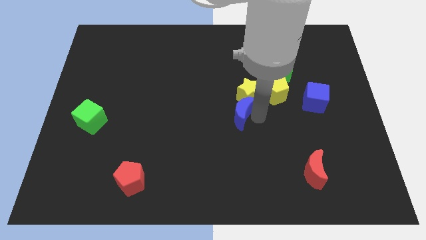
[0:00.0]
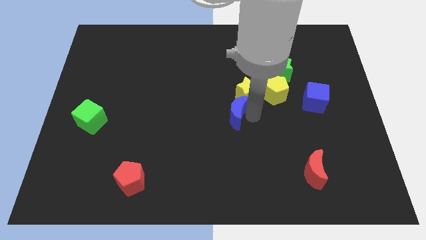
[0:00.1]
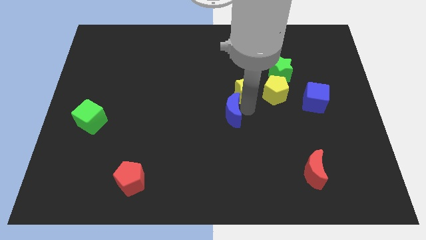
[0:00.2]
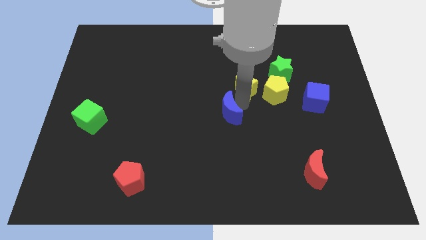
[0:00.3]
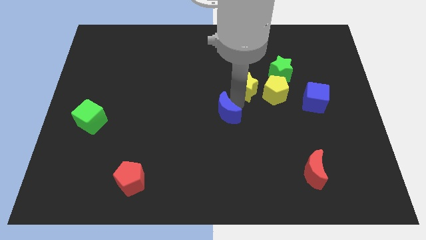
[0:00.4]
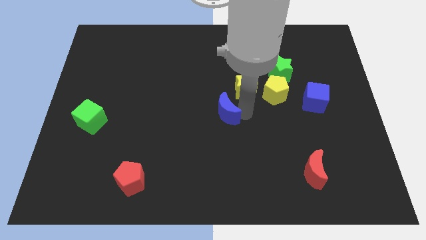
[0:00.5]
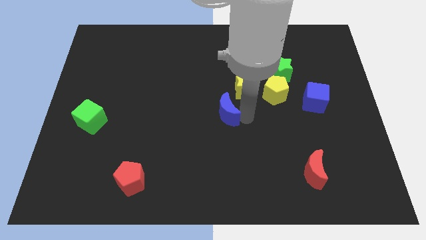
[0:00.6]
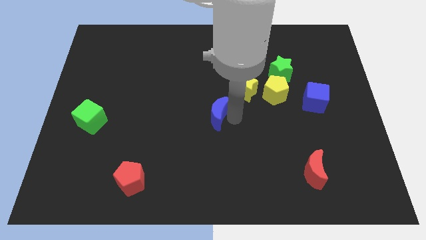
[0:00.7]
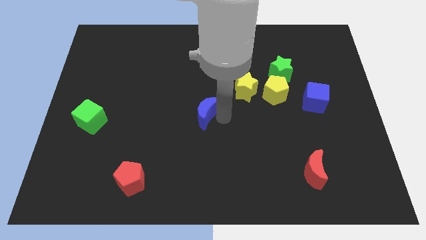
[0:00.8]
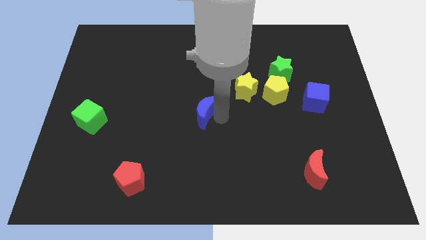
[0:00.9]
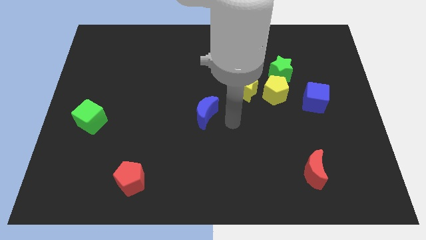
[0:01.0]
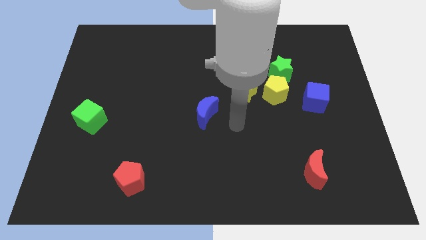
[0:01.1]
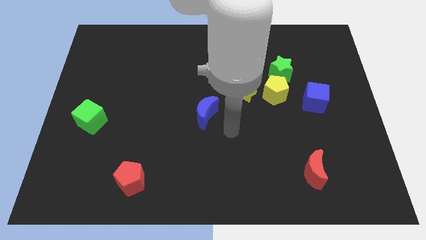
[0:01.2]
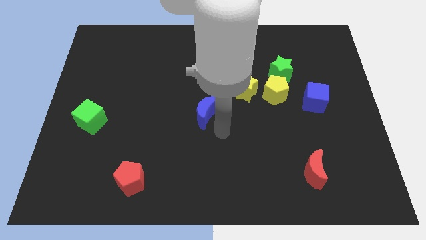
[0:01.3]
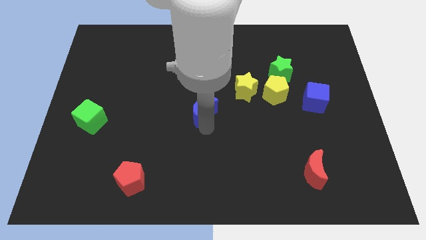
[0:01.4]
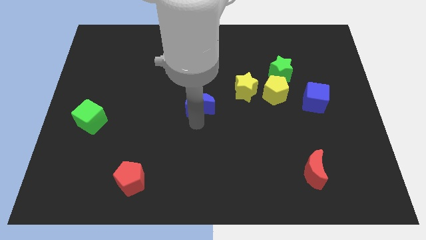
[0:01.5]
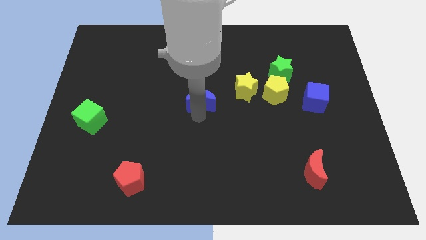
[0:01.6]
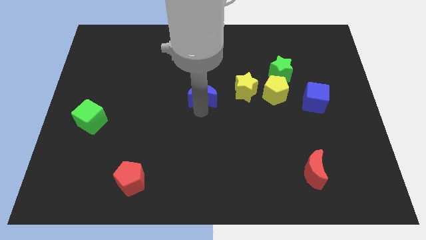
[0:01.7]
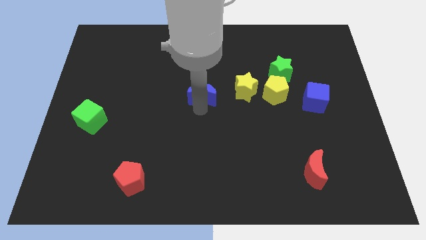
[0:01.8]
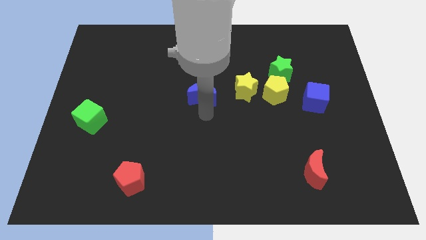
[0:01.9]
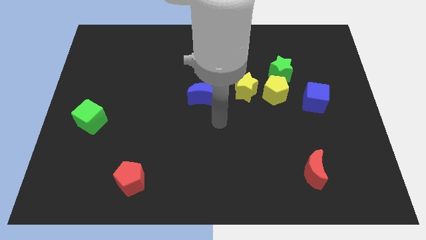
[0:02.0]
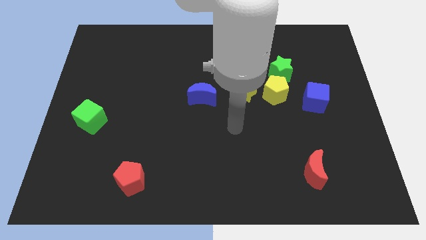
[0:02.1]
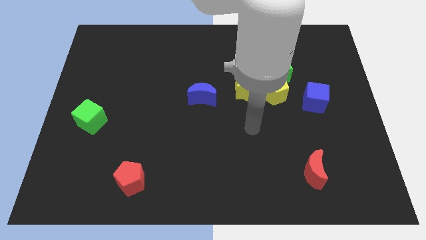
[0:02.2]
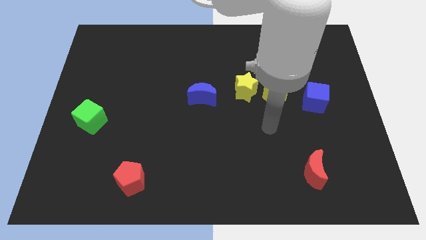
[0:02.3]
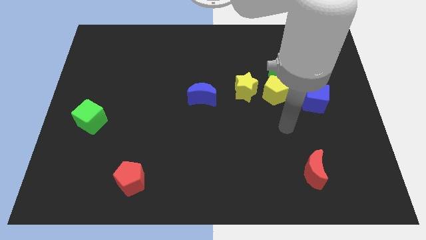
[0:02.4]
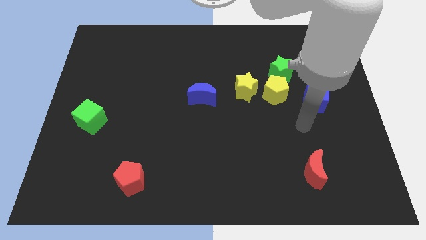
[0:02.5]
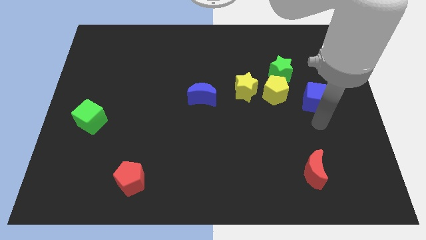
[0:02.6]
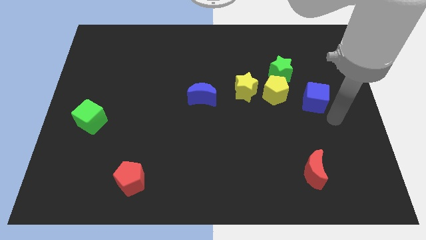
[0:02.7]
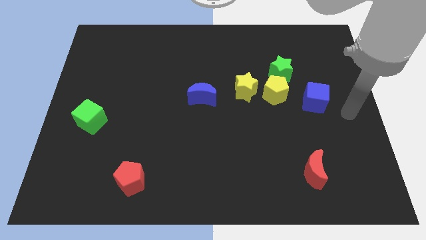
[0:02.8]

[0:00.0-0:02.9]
move the blue moon left beside the yellow star

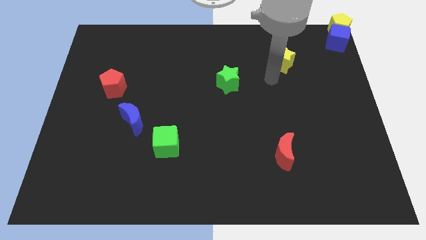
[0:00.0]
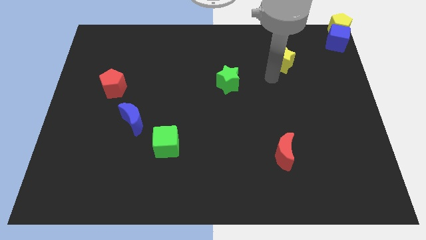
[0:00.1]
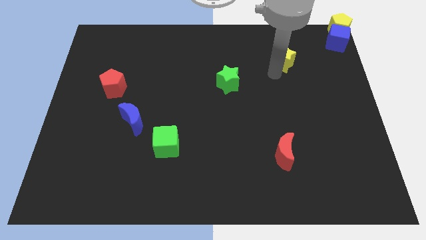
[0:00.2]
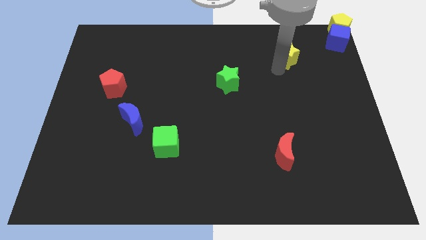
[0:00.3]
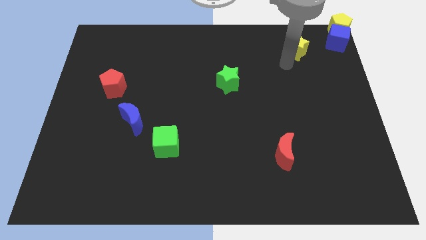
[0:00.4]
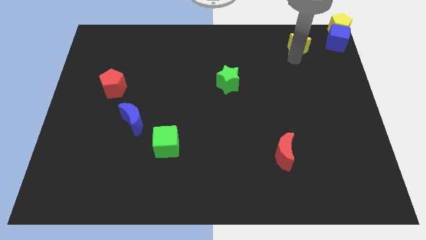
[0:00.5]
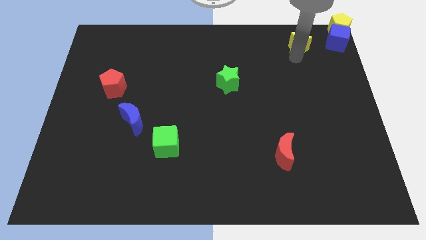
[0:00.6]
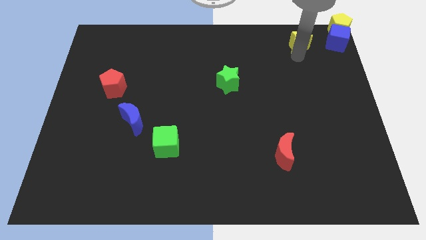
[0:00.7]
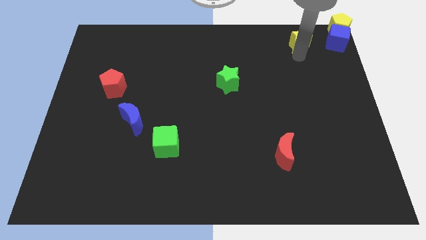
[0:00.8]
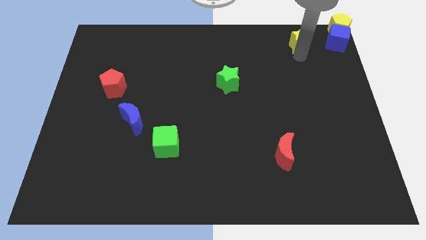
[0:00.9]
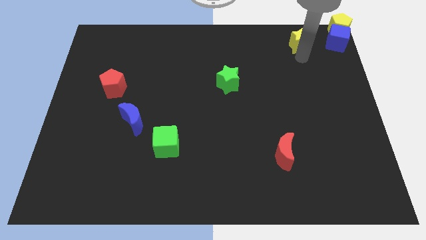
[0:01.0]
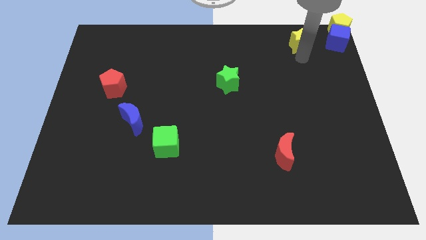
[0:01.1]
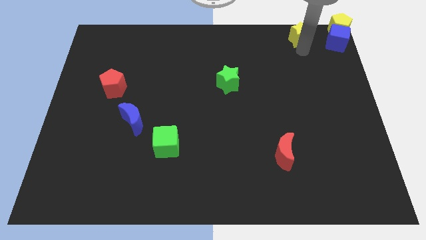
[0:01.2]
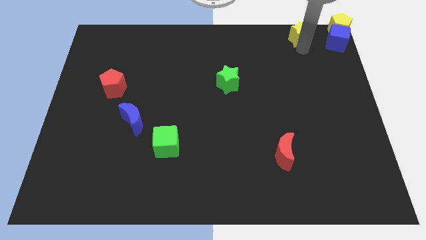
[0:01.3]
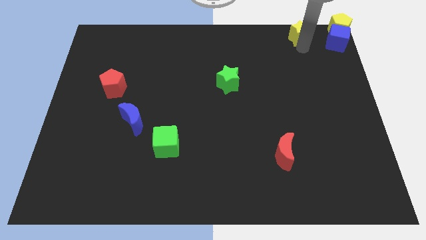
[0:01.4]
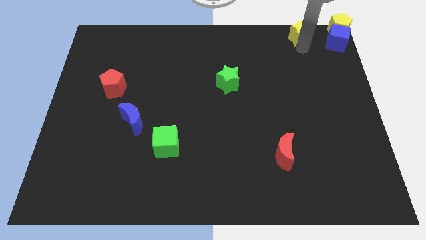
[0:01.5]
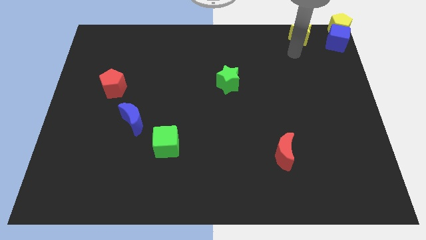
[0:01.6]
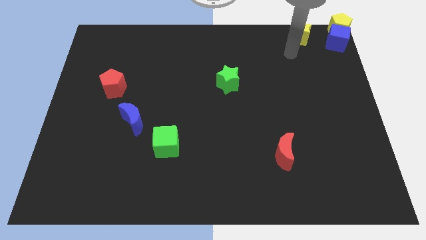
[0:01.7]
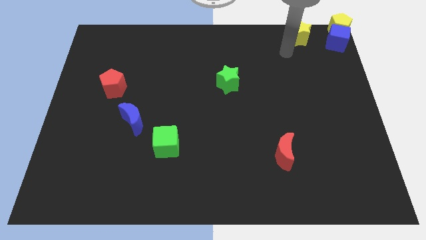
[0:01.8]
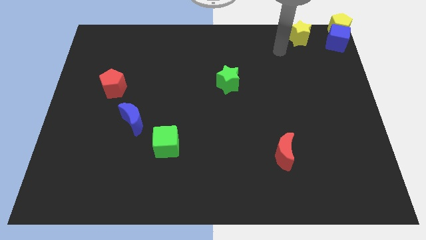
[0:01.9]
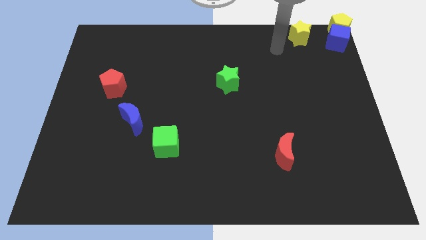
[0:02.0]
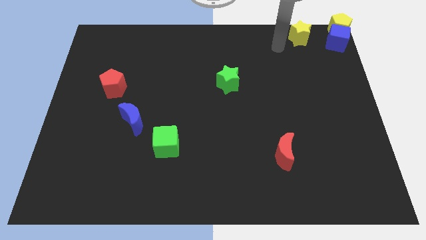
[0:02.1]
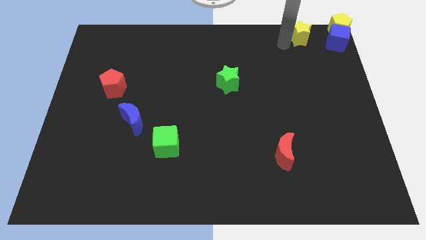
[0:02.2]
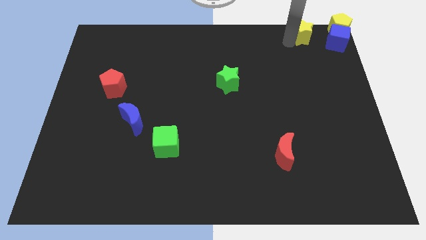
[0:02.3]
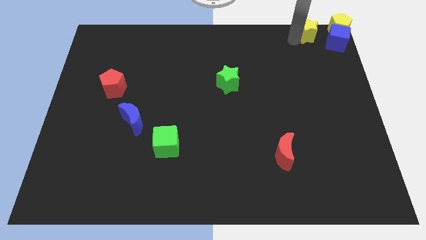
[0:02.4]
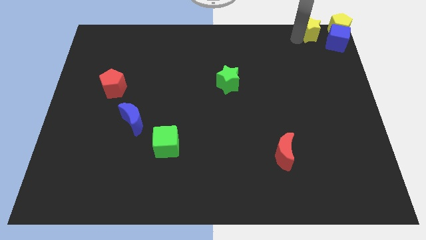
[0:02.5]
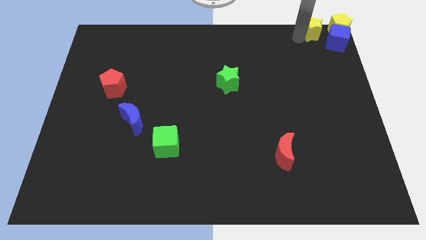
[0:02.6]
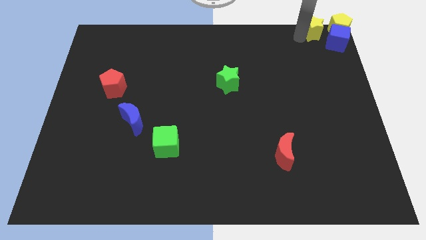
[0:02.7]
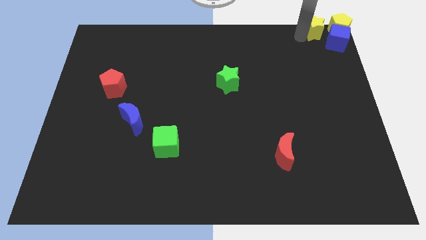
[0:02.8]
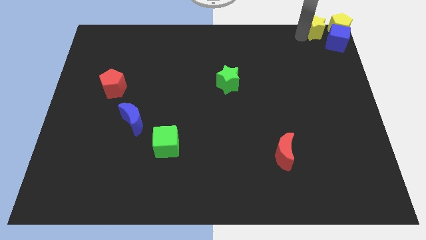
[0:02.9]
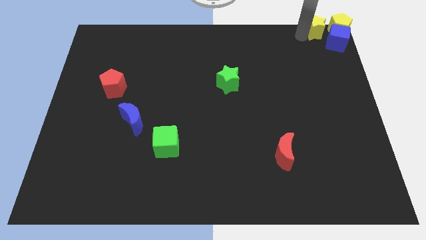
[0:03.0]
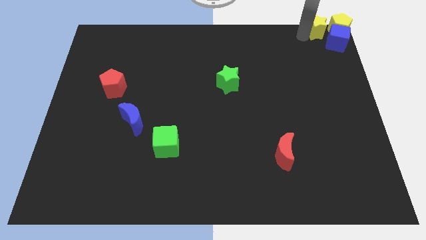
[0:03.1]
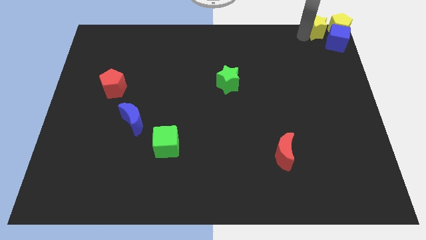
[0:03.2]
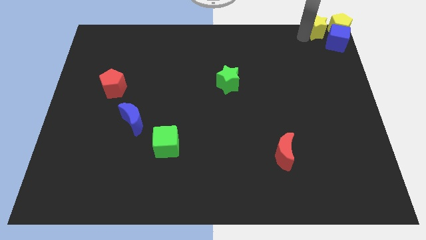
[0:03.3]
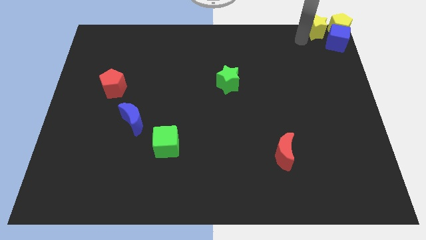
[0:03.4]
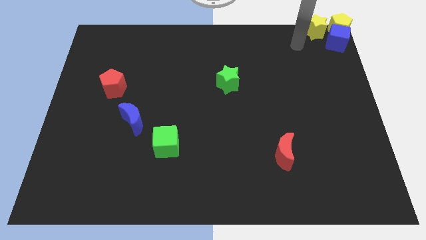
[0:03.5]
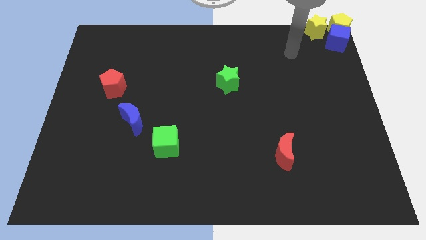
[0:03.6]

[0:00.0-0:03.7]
place the yellow star left to the yellow pentagon

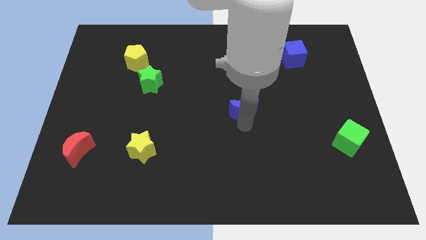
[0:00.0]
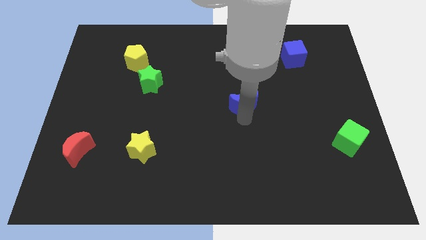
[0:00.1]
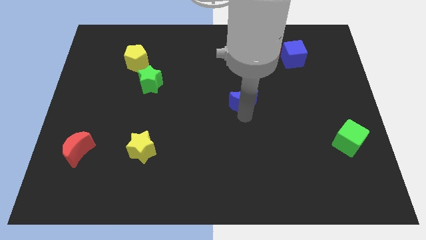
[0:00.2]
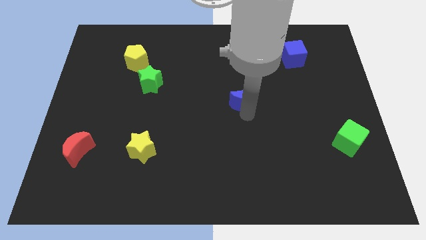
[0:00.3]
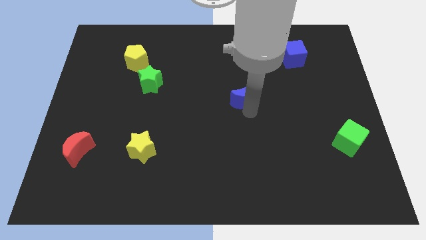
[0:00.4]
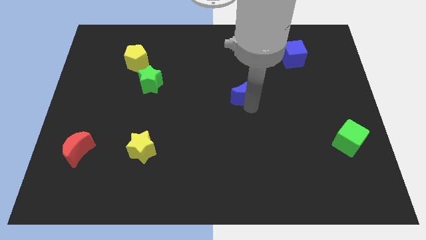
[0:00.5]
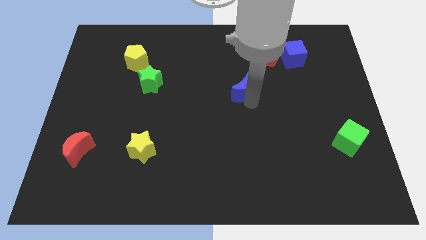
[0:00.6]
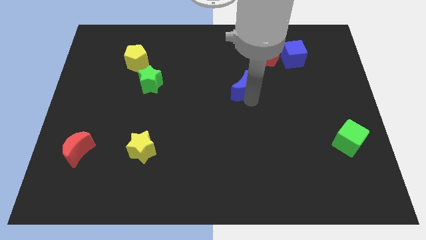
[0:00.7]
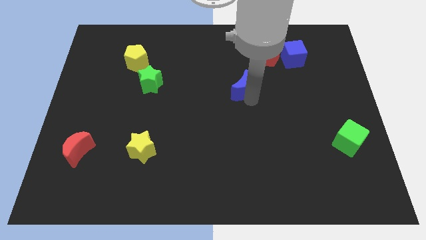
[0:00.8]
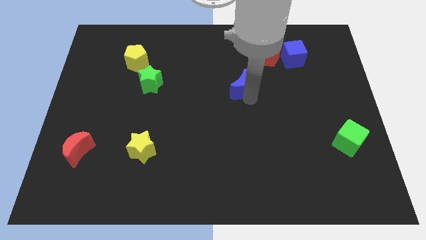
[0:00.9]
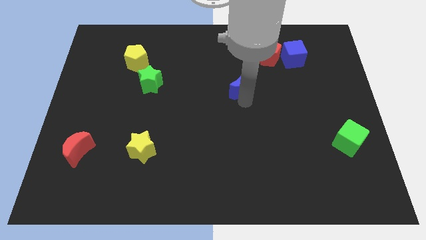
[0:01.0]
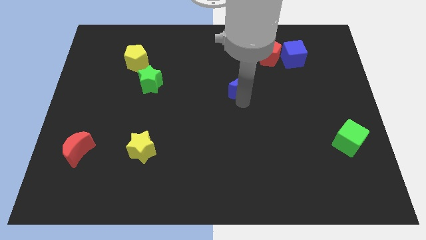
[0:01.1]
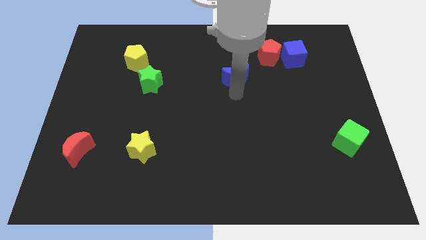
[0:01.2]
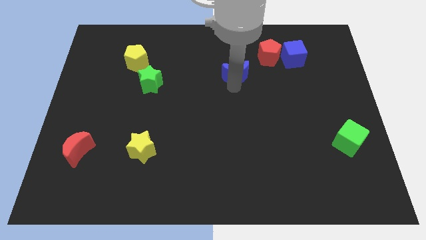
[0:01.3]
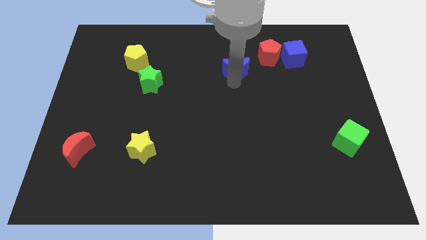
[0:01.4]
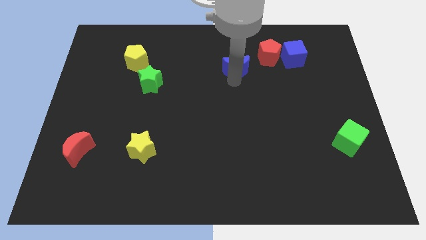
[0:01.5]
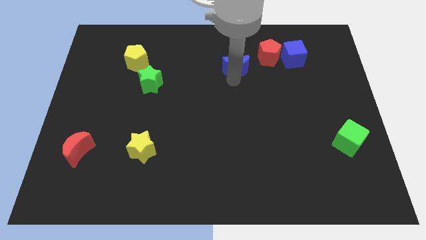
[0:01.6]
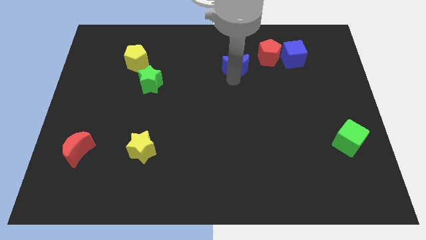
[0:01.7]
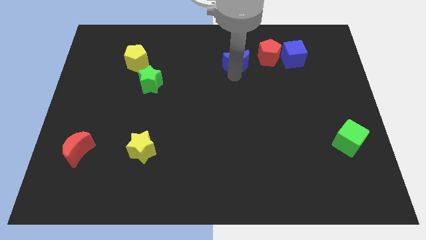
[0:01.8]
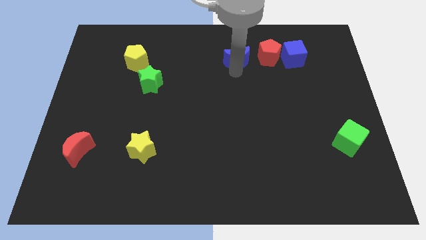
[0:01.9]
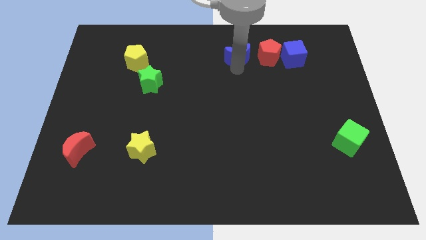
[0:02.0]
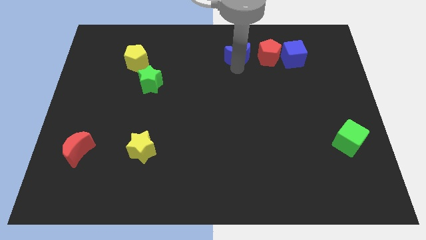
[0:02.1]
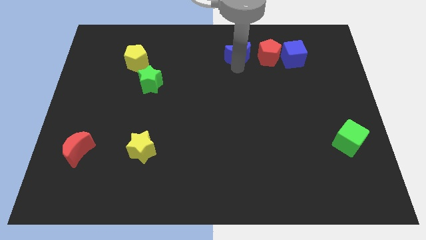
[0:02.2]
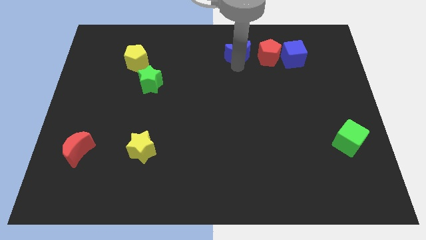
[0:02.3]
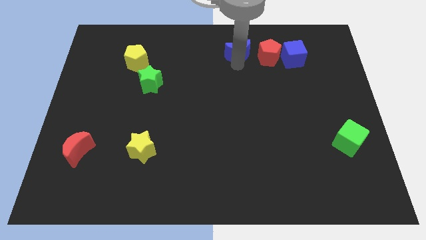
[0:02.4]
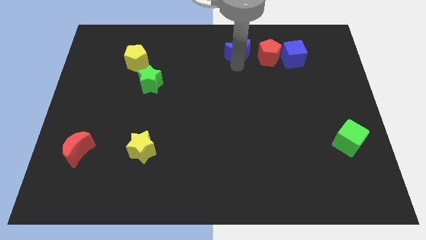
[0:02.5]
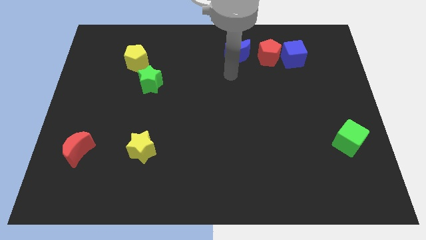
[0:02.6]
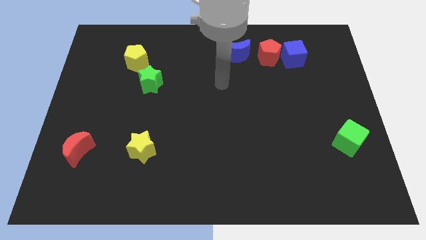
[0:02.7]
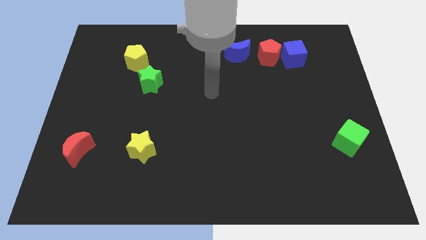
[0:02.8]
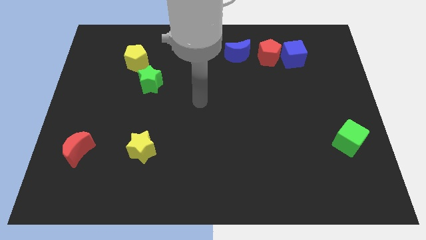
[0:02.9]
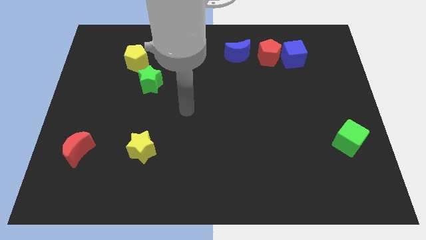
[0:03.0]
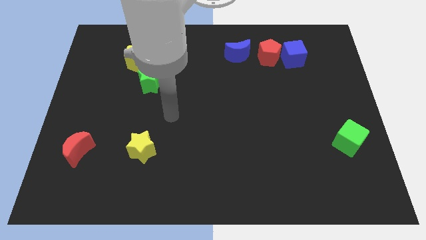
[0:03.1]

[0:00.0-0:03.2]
push the blue moon to the left of the red pentagon
